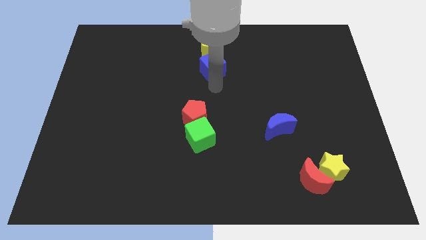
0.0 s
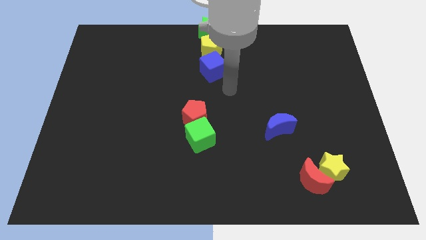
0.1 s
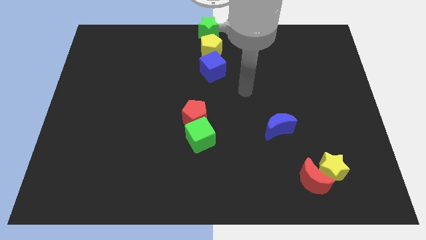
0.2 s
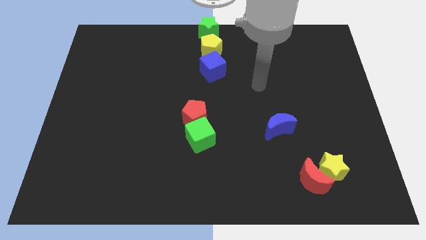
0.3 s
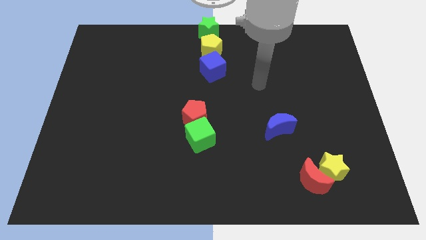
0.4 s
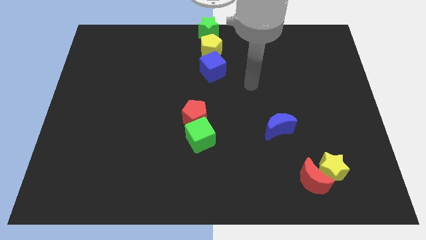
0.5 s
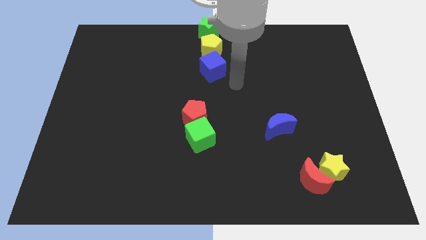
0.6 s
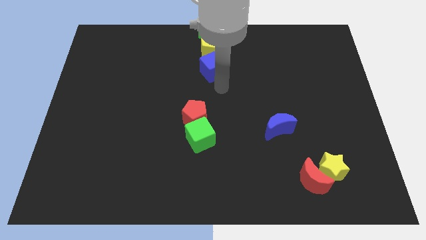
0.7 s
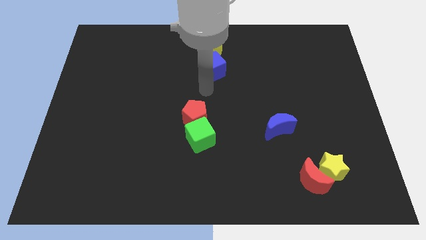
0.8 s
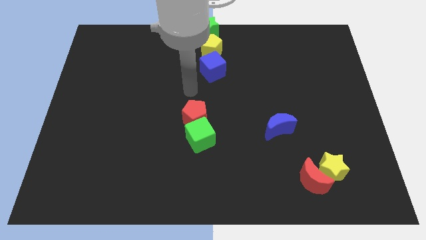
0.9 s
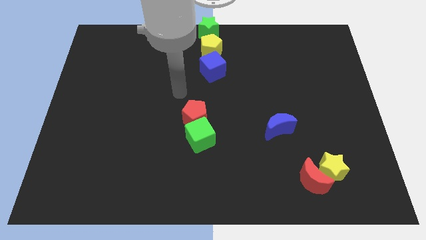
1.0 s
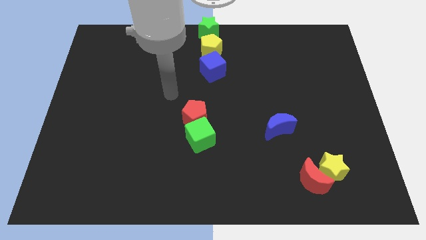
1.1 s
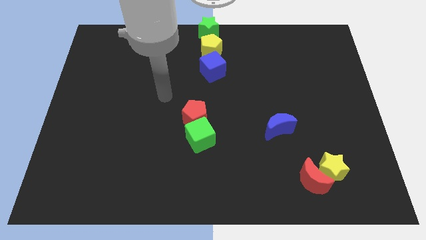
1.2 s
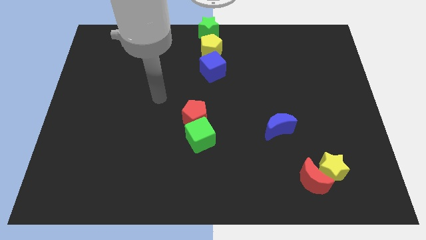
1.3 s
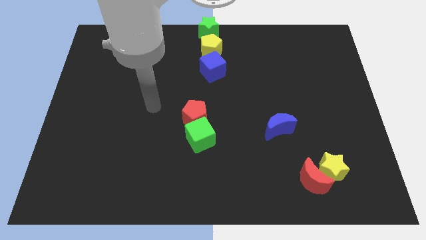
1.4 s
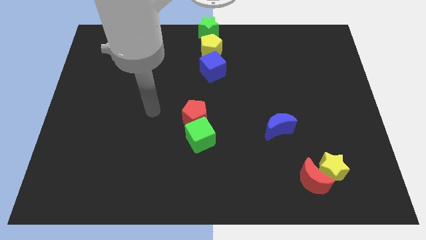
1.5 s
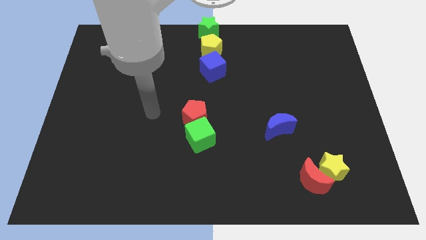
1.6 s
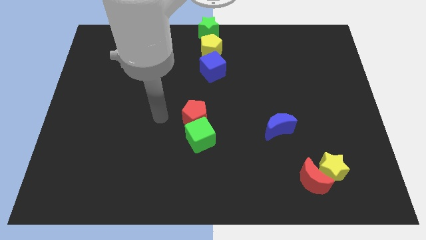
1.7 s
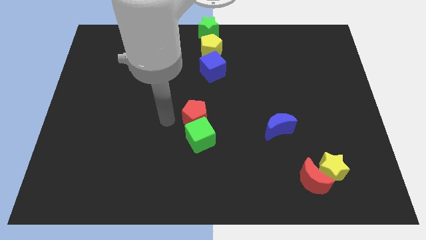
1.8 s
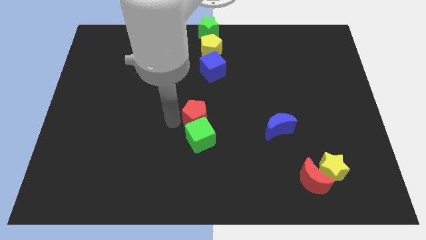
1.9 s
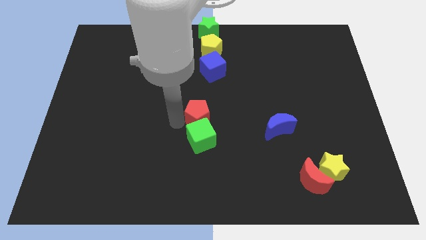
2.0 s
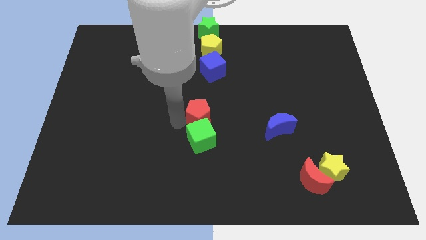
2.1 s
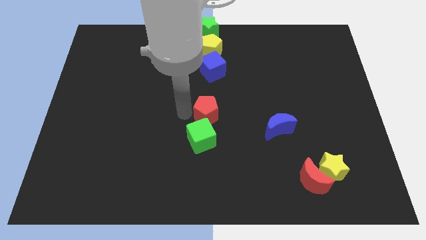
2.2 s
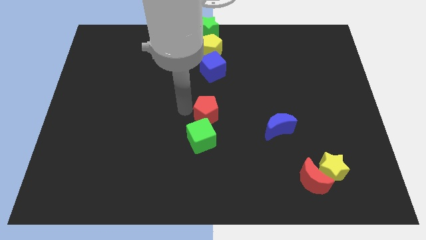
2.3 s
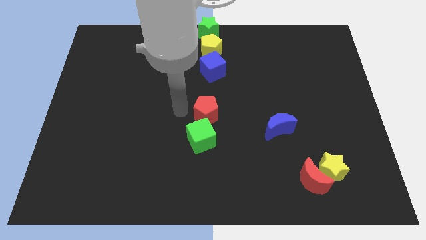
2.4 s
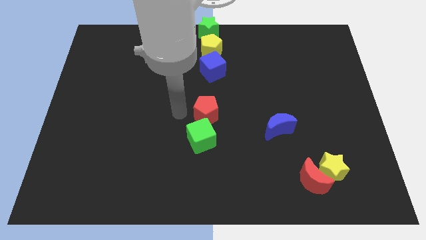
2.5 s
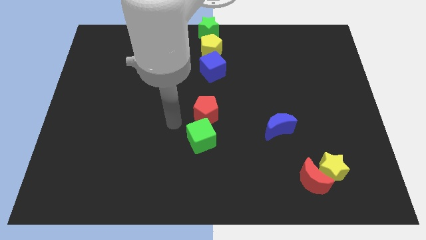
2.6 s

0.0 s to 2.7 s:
move the red pentagon slightly to the right

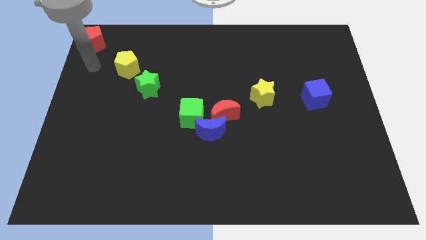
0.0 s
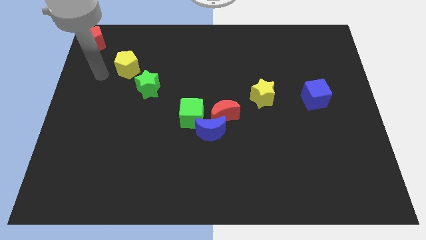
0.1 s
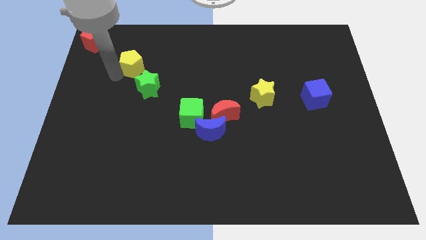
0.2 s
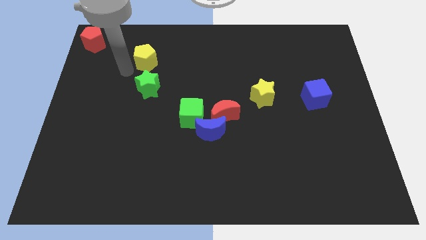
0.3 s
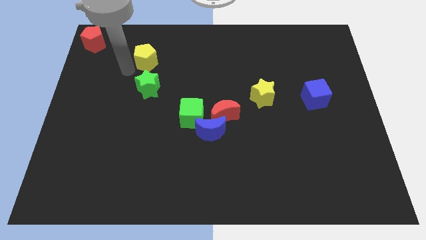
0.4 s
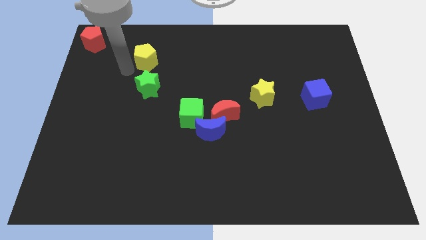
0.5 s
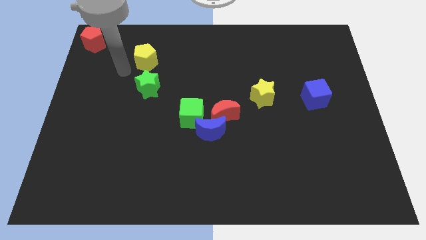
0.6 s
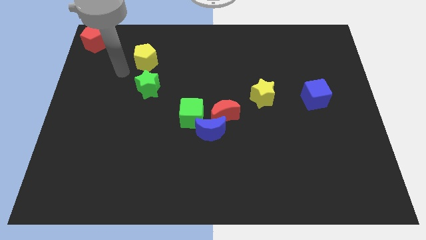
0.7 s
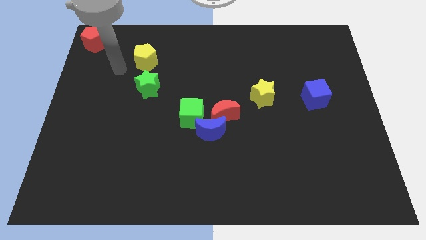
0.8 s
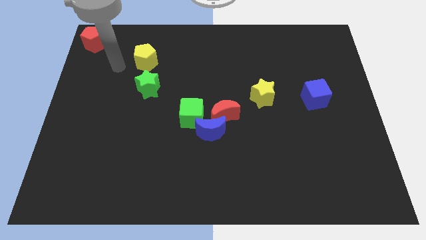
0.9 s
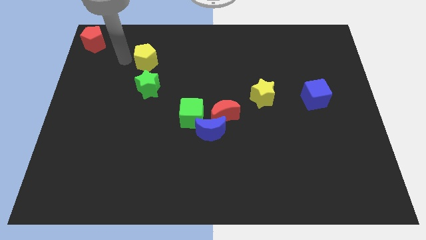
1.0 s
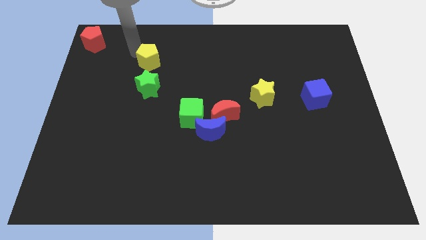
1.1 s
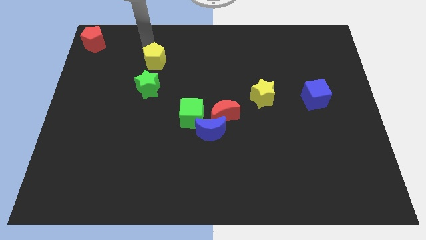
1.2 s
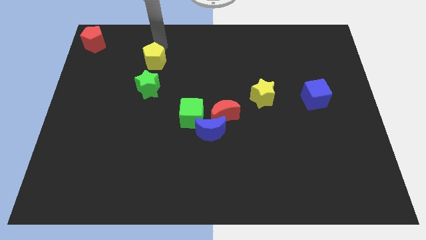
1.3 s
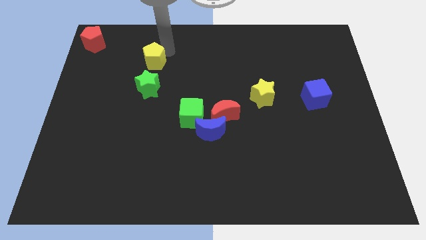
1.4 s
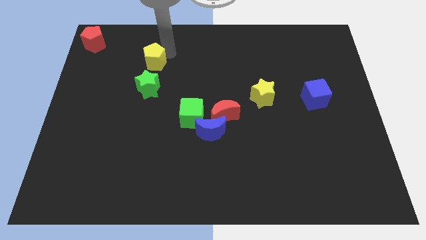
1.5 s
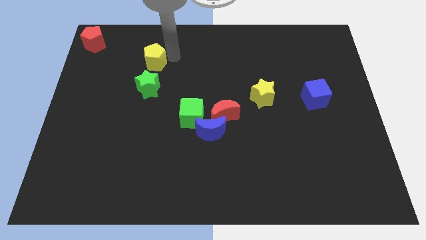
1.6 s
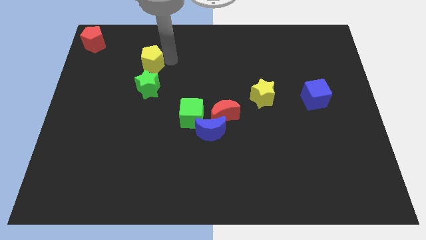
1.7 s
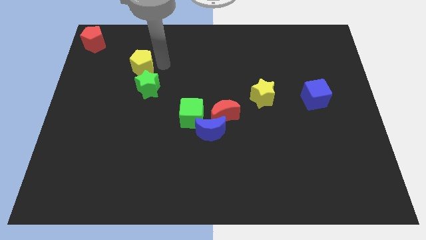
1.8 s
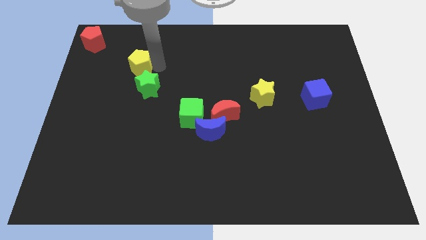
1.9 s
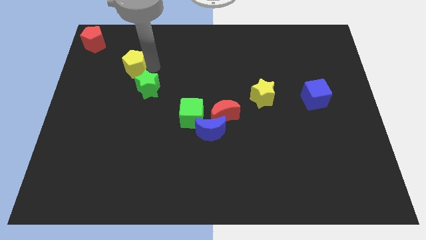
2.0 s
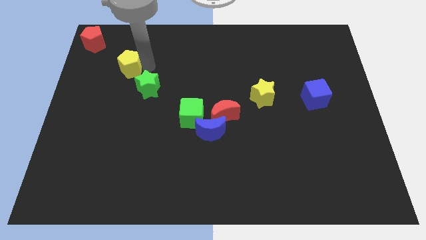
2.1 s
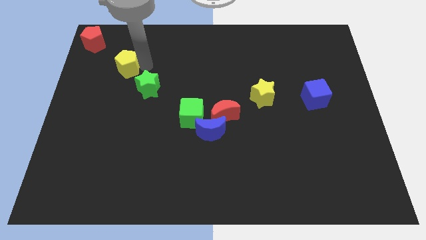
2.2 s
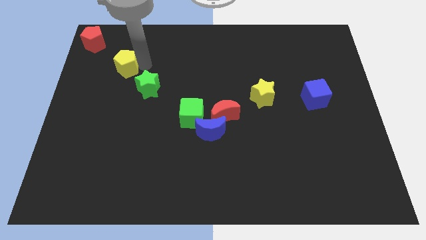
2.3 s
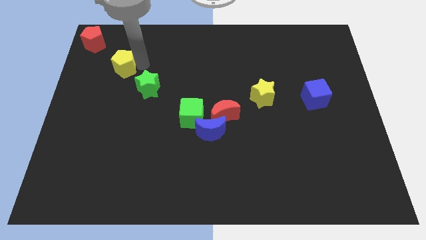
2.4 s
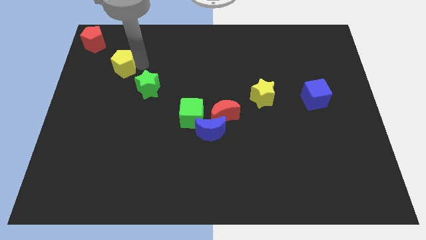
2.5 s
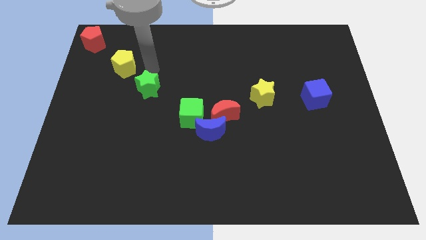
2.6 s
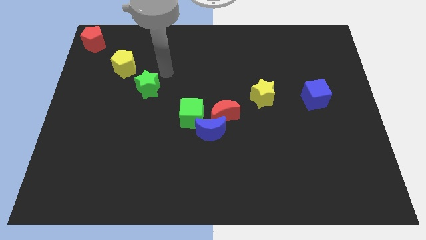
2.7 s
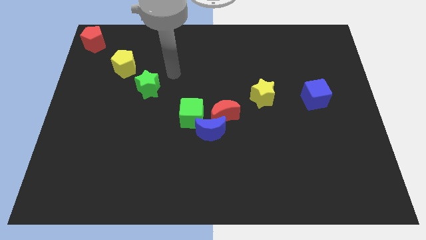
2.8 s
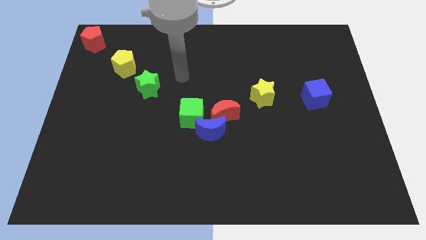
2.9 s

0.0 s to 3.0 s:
move the yellow pentagon to the top left of the green star

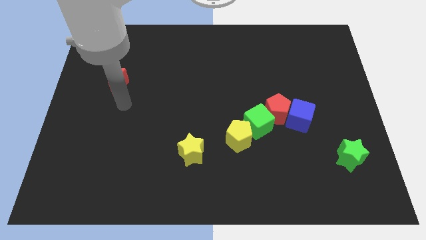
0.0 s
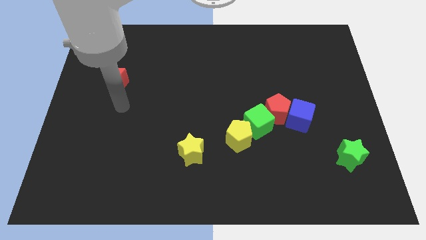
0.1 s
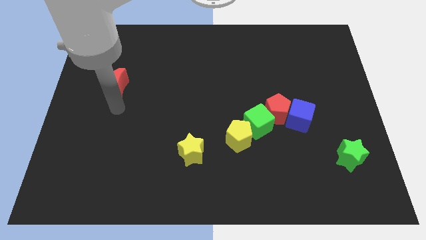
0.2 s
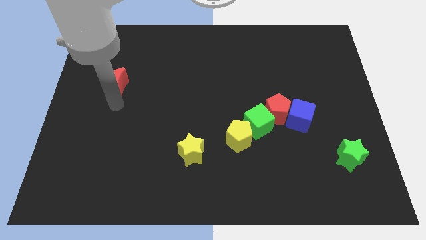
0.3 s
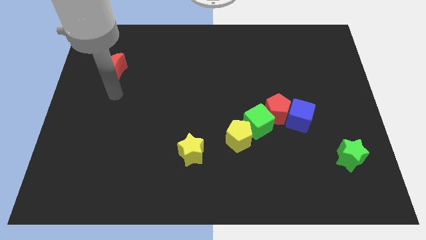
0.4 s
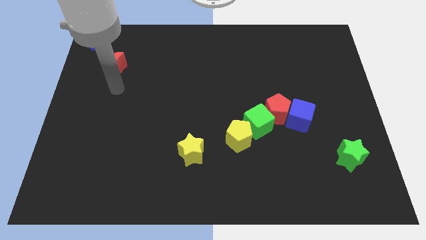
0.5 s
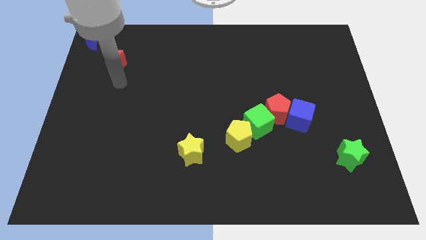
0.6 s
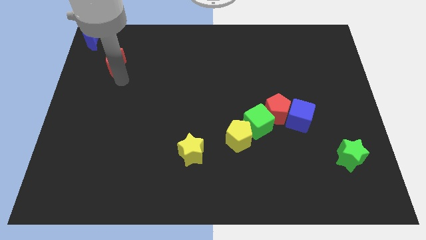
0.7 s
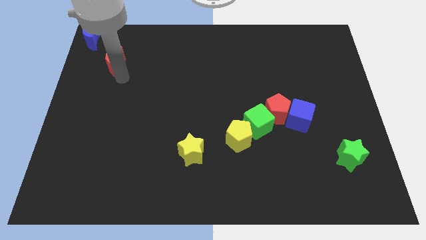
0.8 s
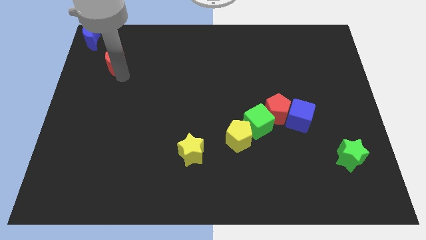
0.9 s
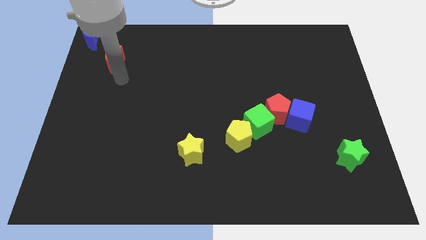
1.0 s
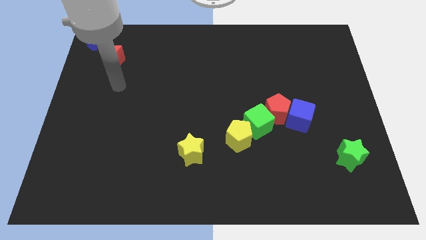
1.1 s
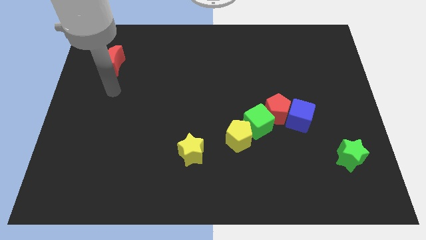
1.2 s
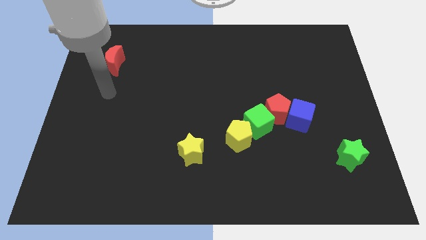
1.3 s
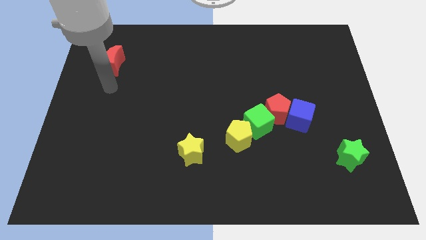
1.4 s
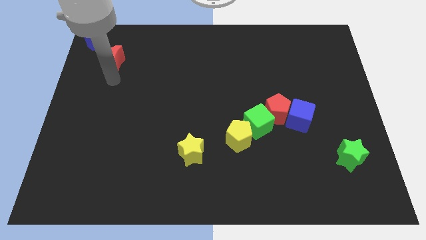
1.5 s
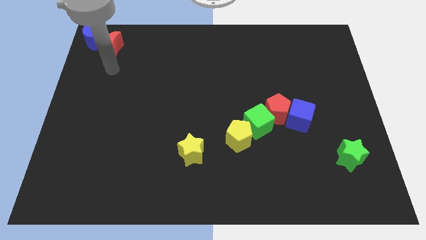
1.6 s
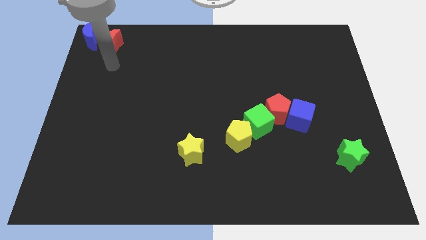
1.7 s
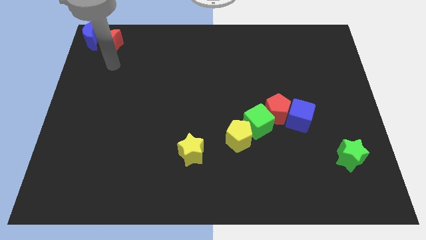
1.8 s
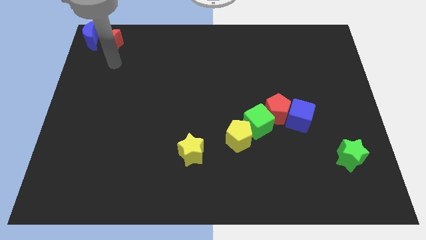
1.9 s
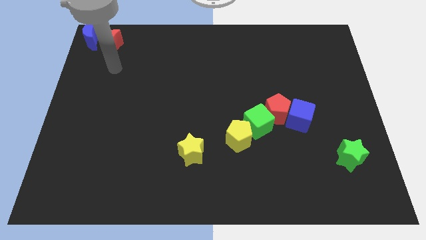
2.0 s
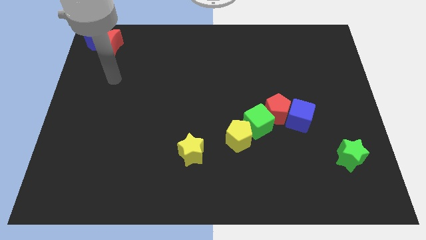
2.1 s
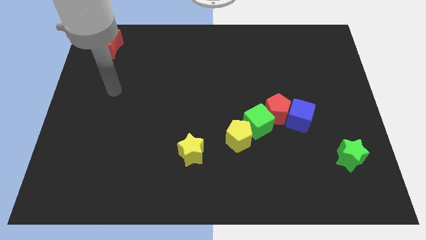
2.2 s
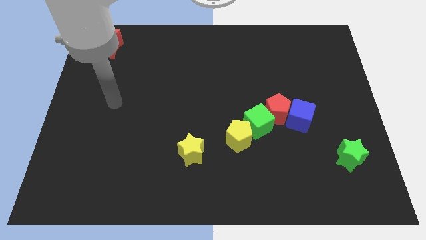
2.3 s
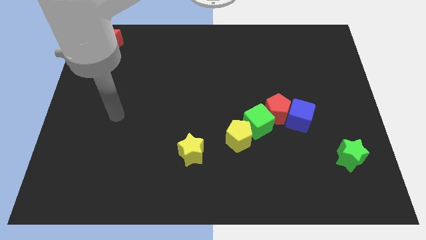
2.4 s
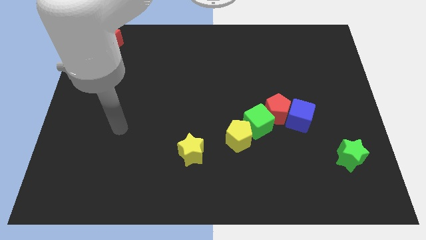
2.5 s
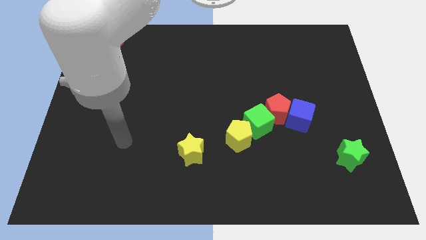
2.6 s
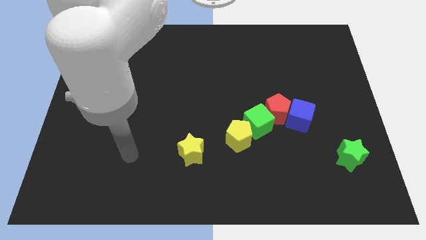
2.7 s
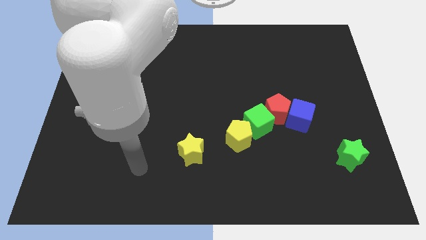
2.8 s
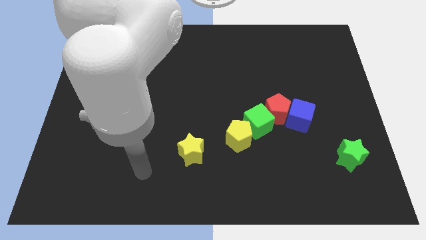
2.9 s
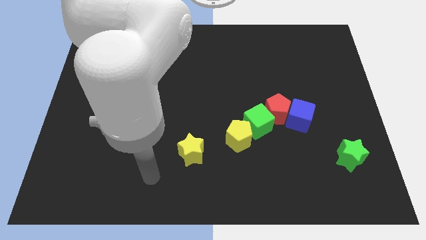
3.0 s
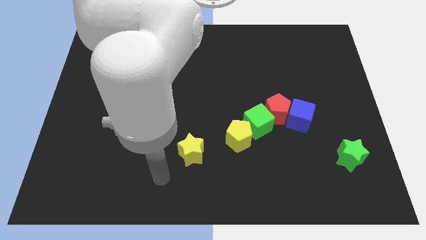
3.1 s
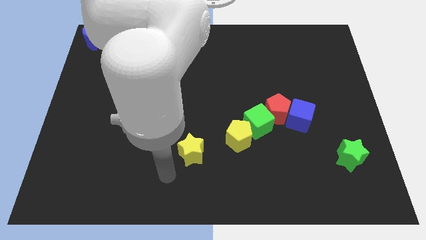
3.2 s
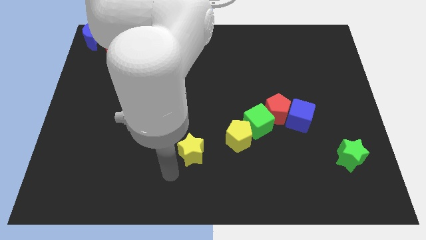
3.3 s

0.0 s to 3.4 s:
place red moon right to blue moon
